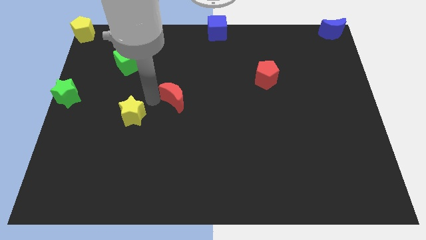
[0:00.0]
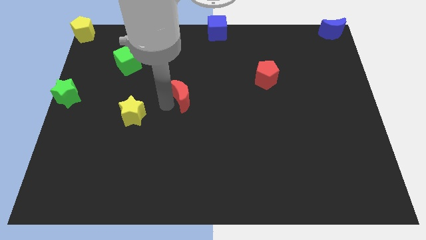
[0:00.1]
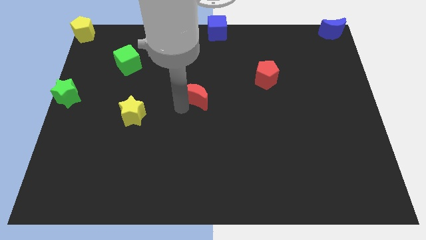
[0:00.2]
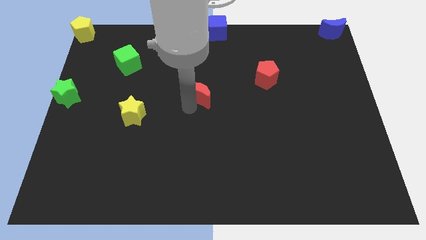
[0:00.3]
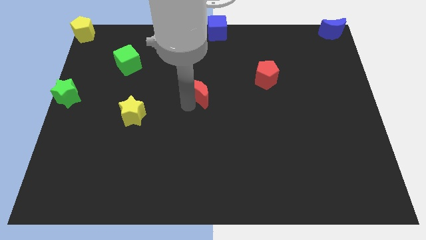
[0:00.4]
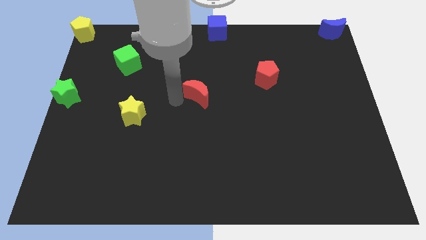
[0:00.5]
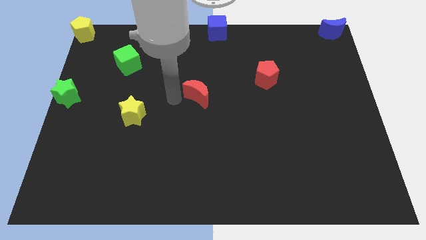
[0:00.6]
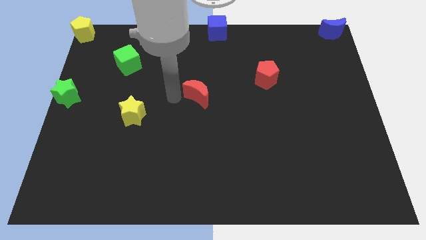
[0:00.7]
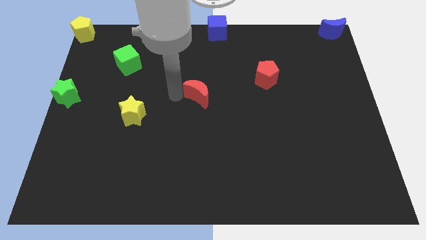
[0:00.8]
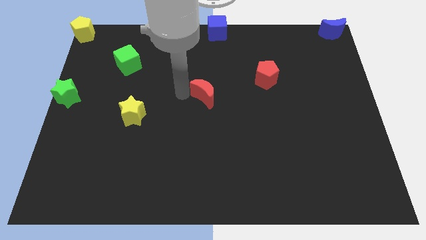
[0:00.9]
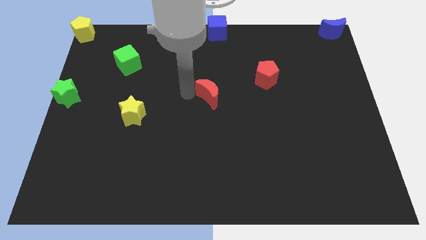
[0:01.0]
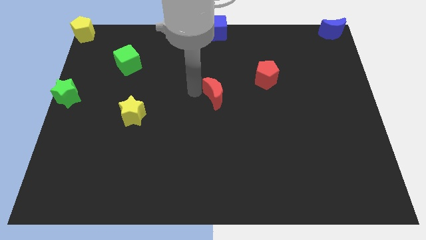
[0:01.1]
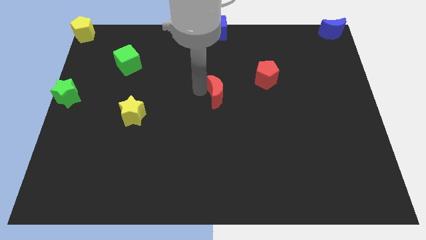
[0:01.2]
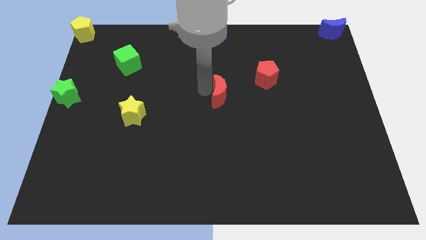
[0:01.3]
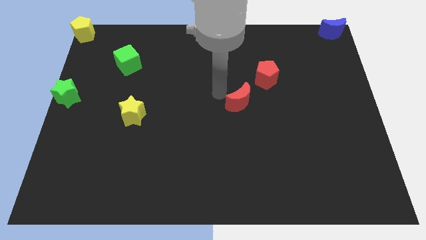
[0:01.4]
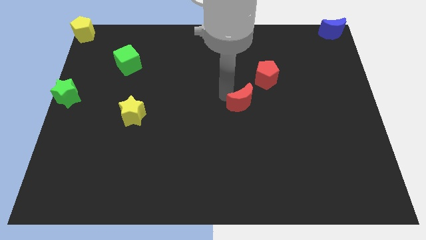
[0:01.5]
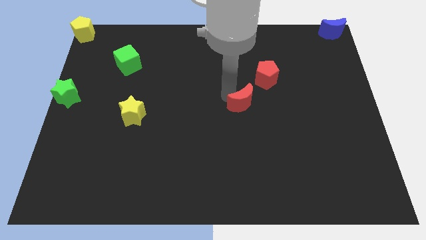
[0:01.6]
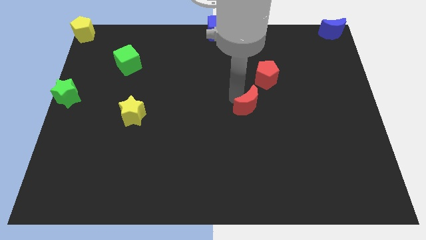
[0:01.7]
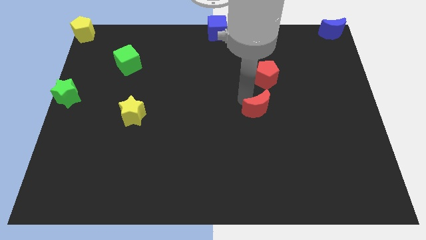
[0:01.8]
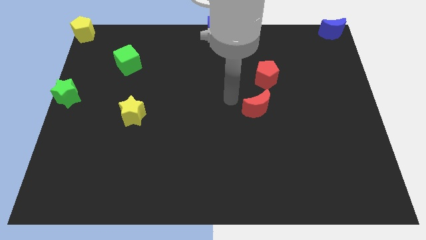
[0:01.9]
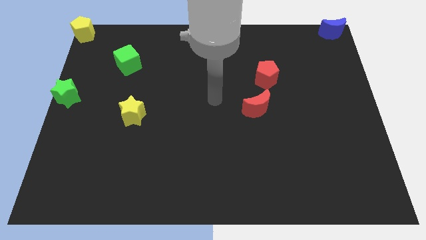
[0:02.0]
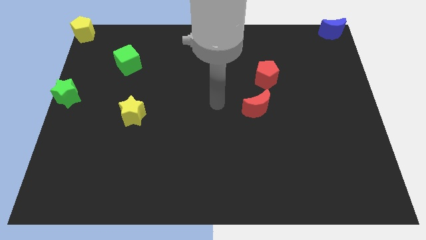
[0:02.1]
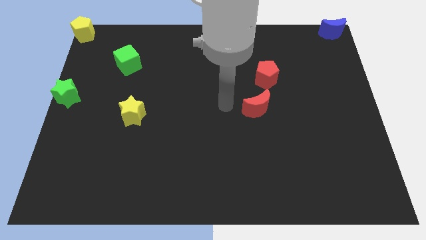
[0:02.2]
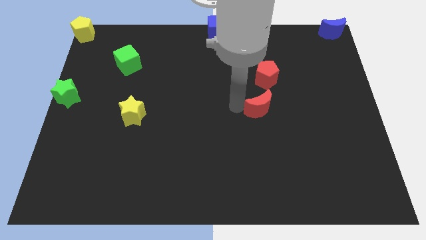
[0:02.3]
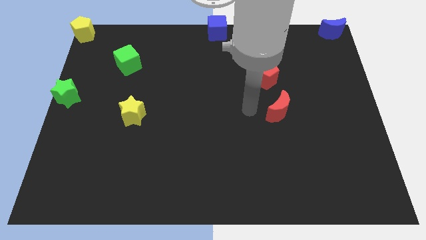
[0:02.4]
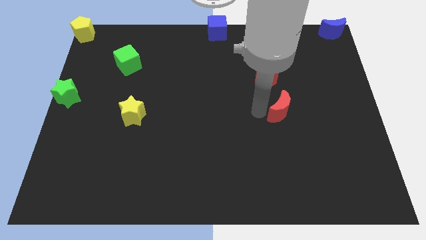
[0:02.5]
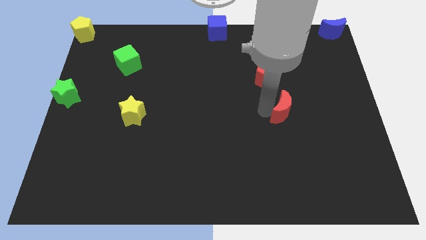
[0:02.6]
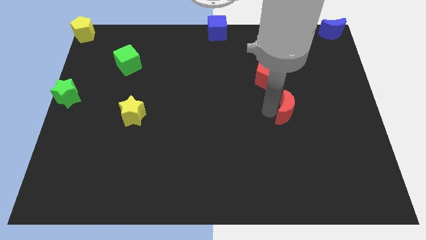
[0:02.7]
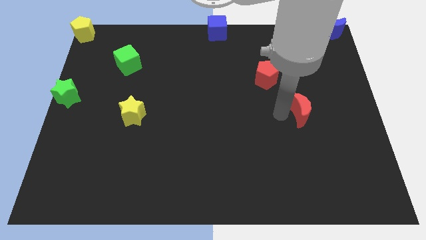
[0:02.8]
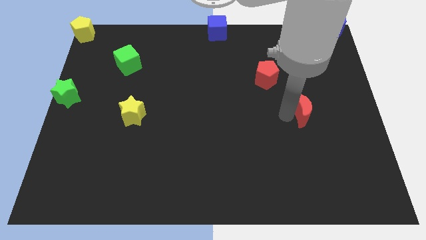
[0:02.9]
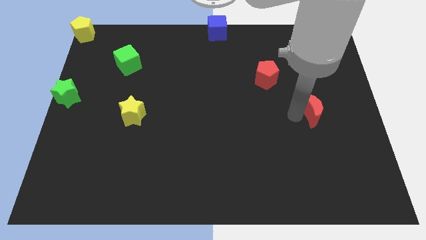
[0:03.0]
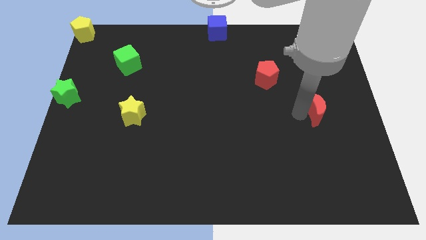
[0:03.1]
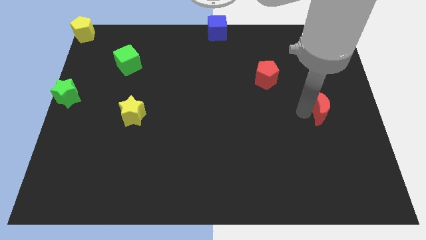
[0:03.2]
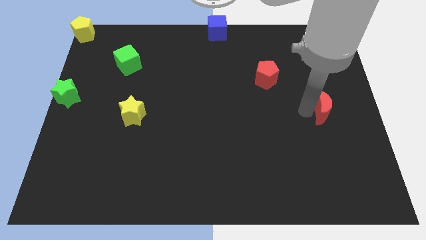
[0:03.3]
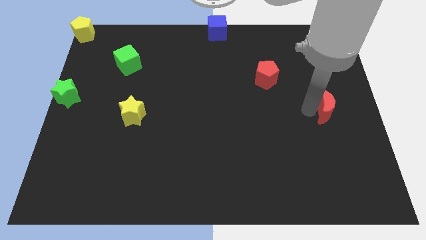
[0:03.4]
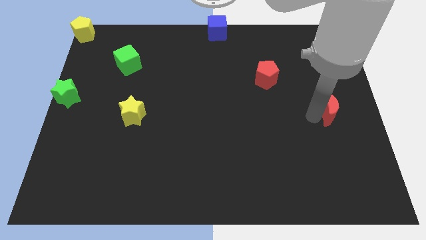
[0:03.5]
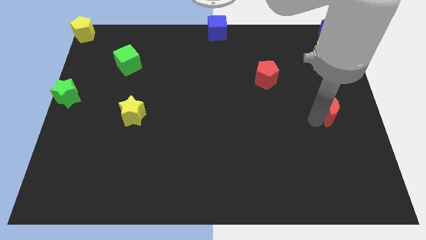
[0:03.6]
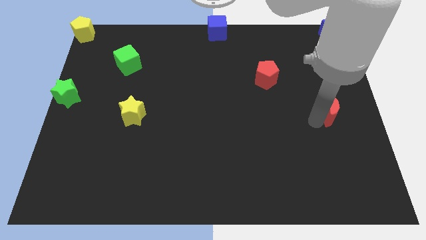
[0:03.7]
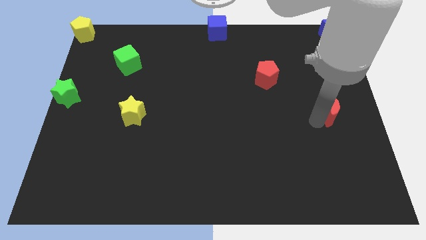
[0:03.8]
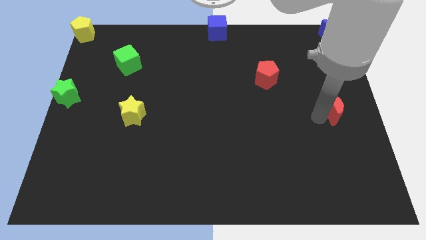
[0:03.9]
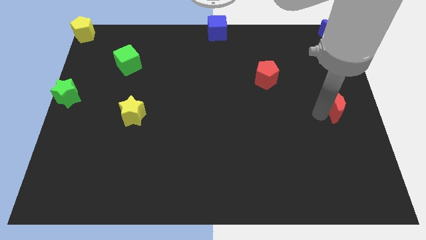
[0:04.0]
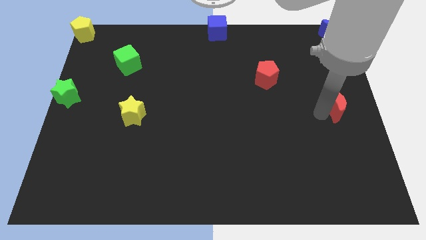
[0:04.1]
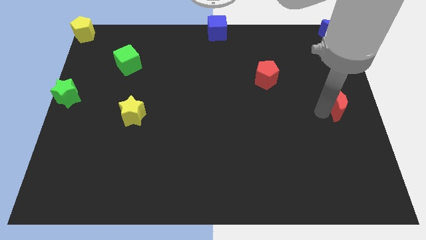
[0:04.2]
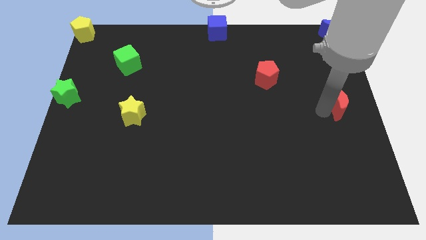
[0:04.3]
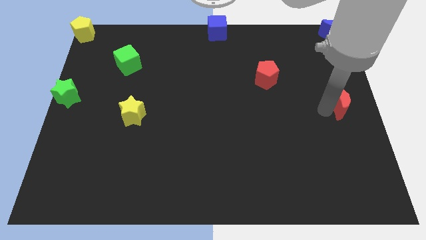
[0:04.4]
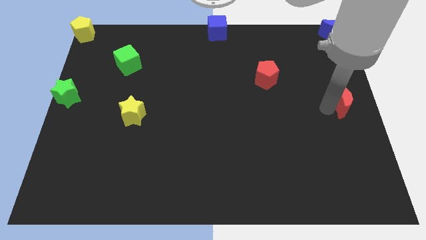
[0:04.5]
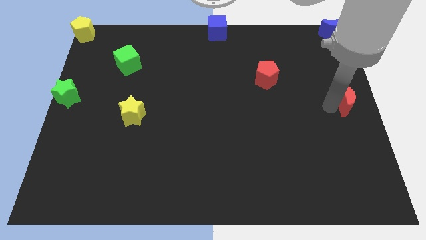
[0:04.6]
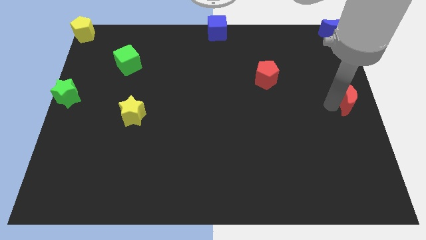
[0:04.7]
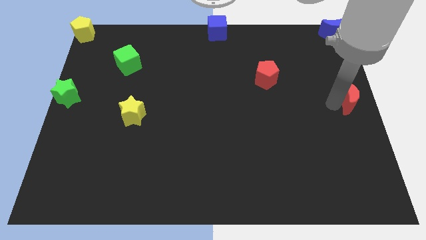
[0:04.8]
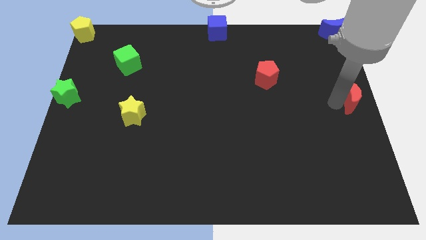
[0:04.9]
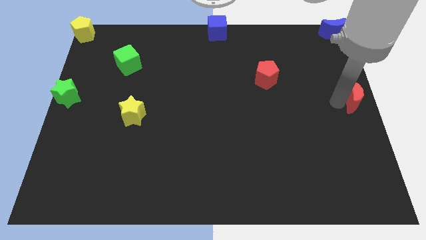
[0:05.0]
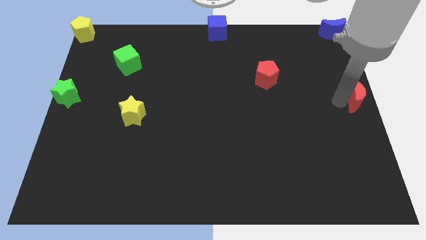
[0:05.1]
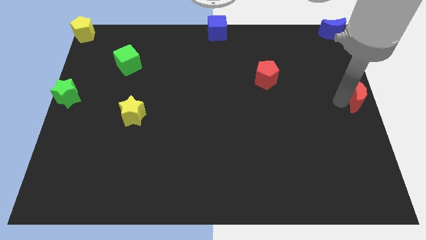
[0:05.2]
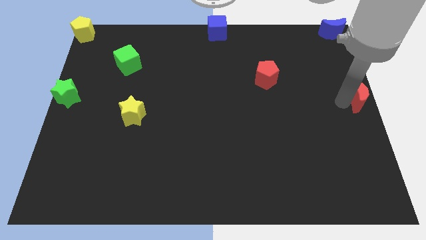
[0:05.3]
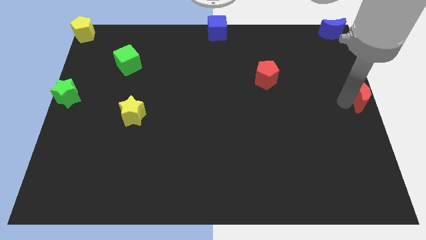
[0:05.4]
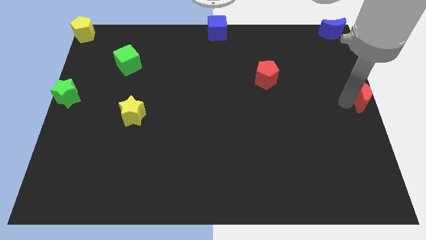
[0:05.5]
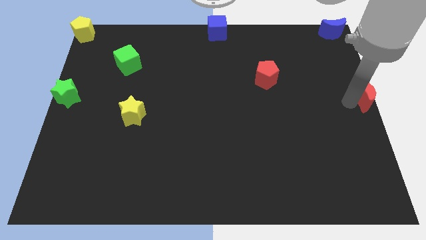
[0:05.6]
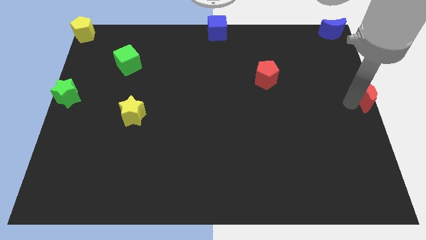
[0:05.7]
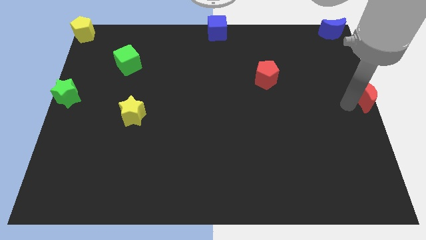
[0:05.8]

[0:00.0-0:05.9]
push red crescent to the right center of the board

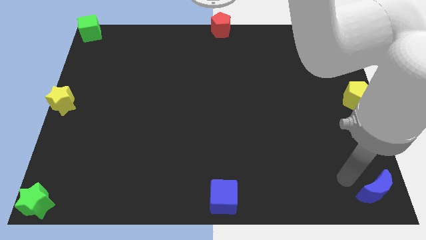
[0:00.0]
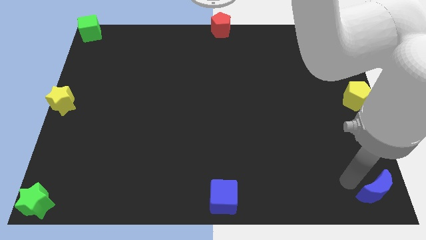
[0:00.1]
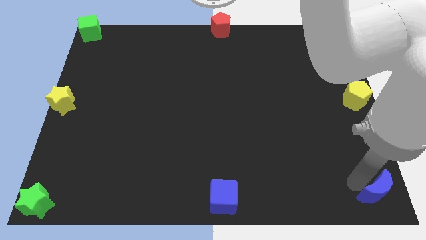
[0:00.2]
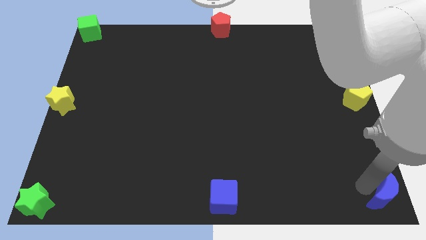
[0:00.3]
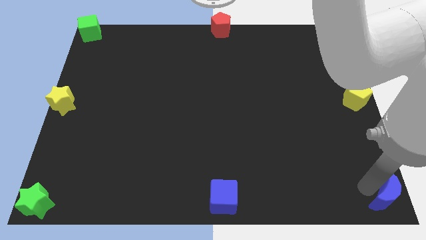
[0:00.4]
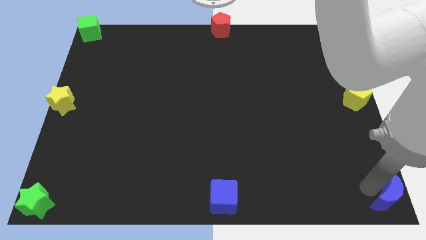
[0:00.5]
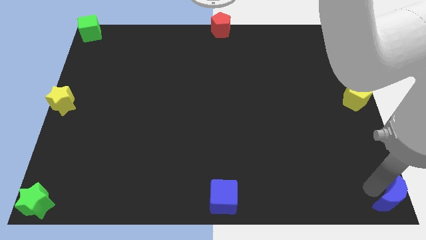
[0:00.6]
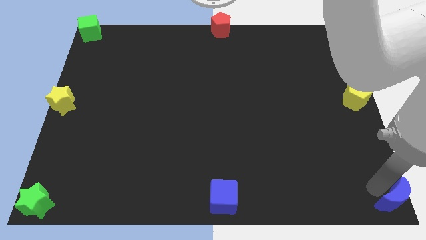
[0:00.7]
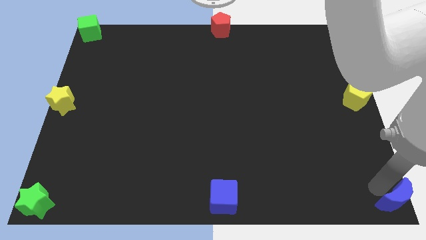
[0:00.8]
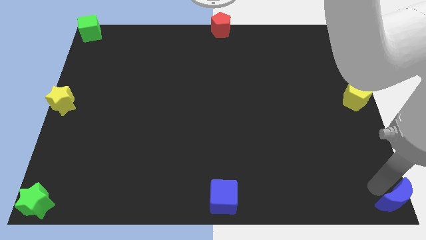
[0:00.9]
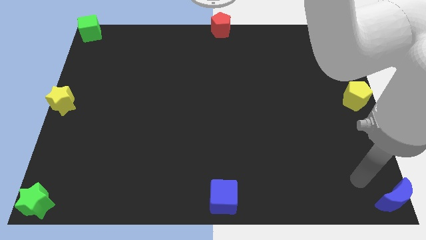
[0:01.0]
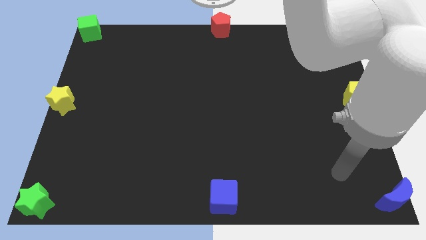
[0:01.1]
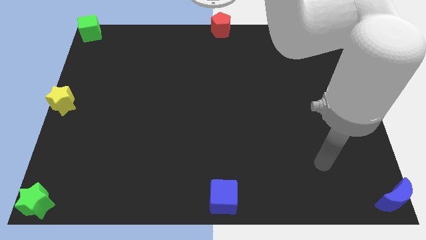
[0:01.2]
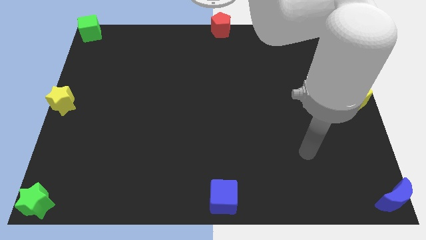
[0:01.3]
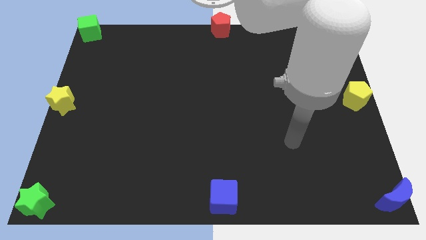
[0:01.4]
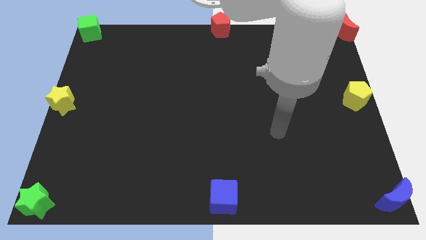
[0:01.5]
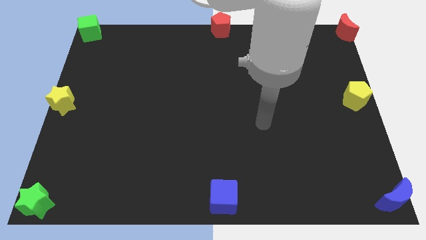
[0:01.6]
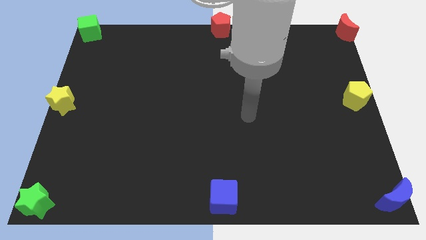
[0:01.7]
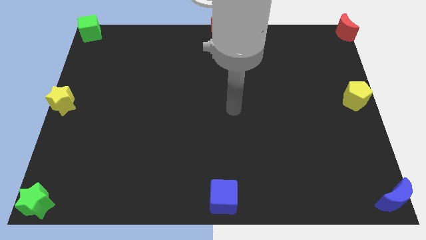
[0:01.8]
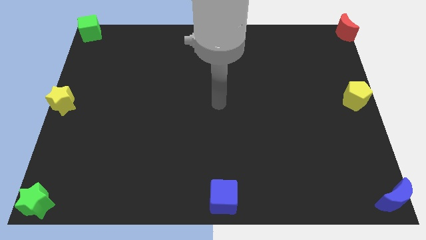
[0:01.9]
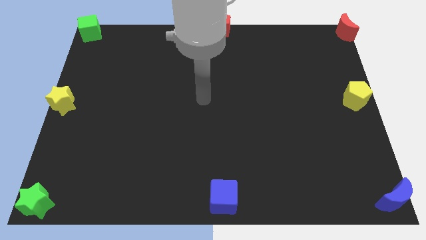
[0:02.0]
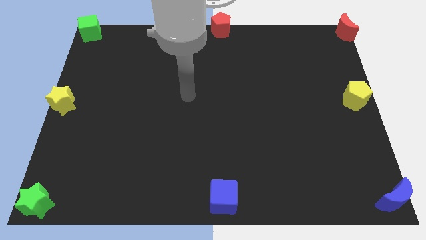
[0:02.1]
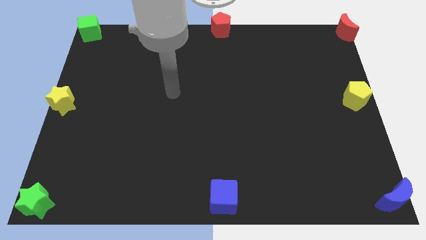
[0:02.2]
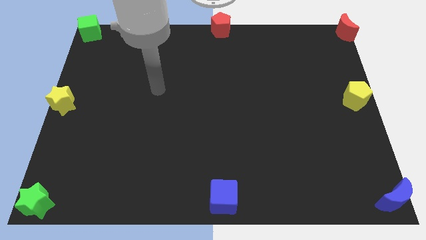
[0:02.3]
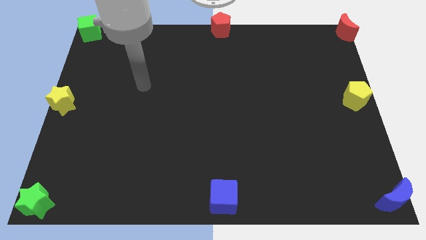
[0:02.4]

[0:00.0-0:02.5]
place the blue moon at the bottom right corner of the board

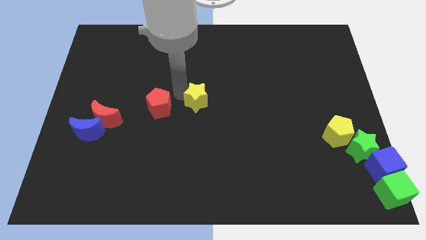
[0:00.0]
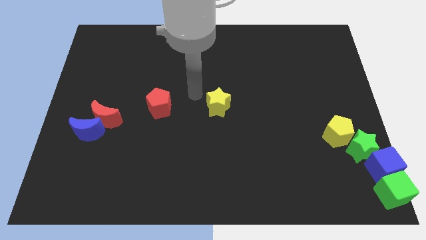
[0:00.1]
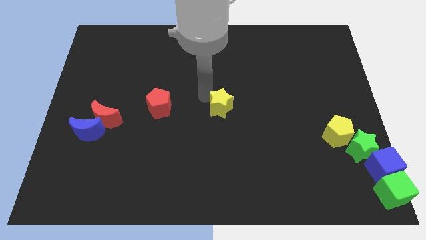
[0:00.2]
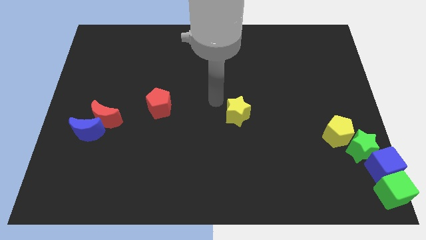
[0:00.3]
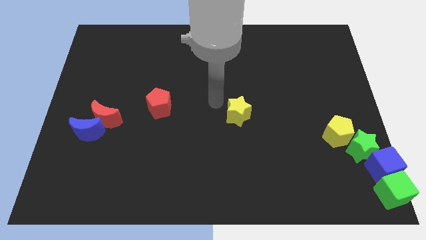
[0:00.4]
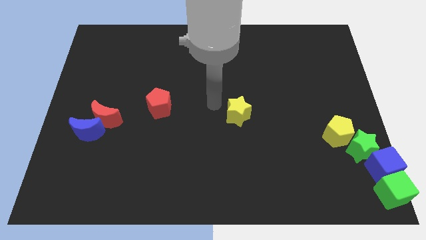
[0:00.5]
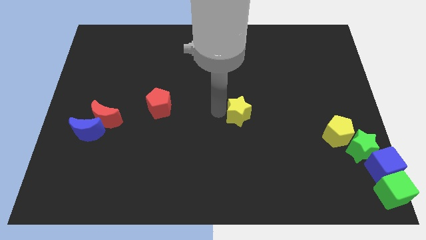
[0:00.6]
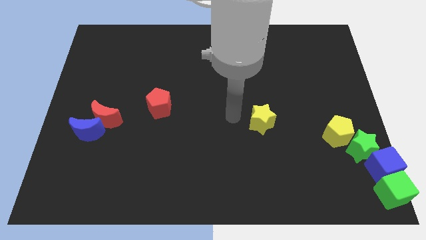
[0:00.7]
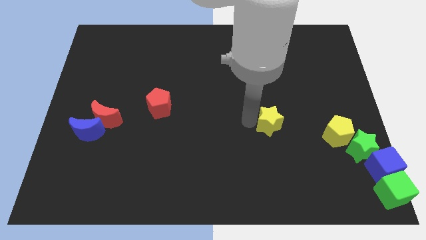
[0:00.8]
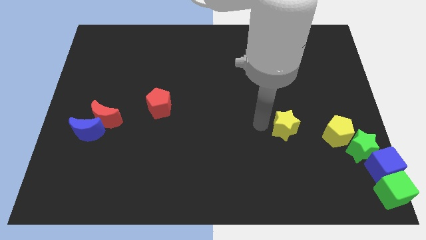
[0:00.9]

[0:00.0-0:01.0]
push the yellow star to the left of the yellow pentagon
